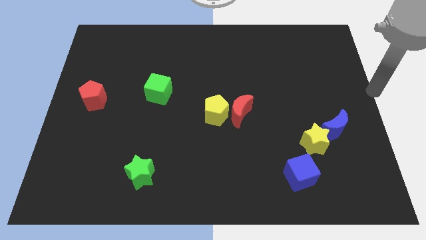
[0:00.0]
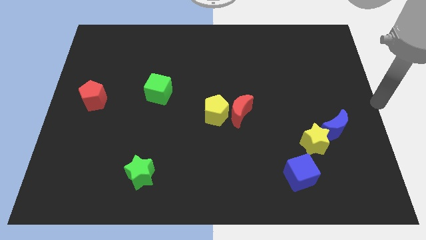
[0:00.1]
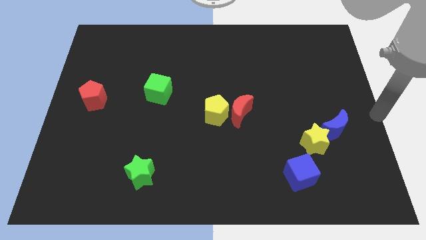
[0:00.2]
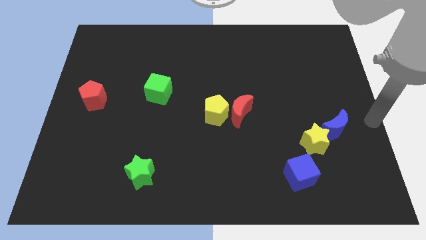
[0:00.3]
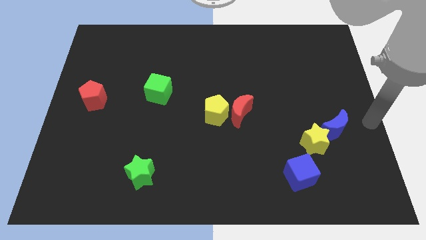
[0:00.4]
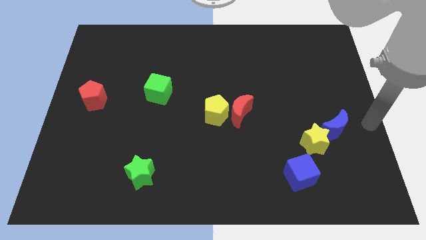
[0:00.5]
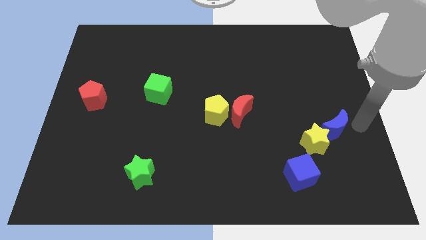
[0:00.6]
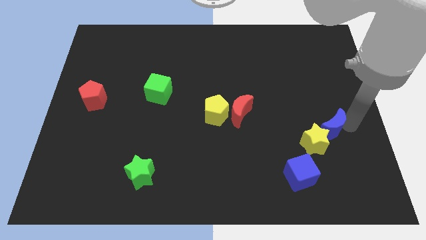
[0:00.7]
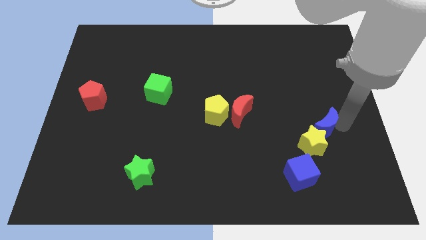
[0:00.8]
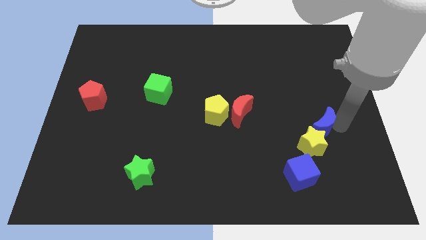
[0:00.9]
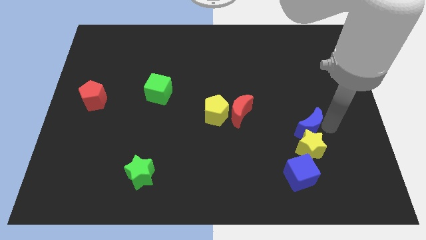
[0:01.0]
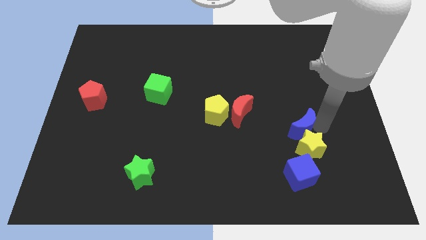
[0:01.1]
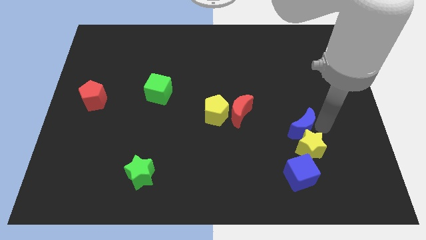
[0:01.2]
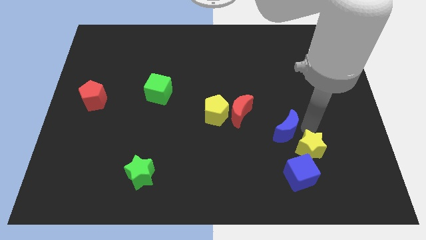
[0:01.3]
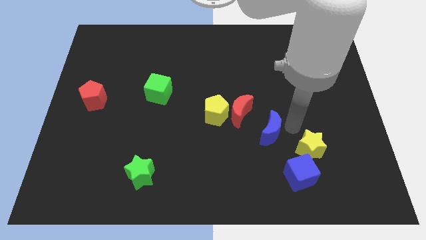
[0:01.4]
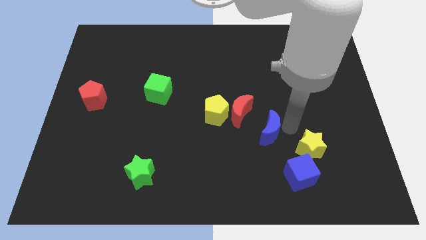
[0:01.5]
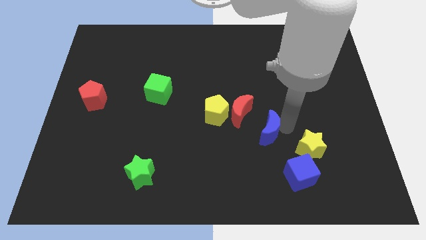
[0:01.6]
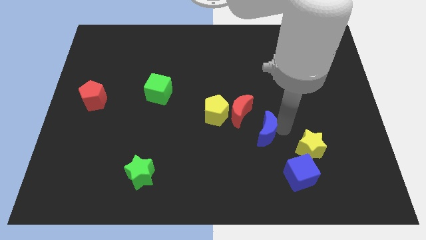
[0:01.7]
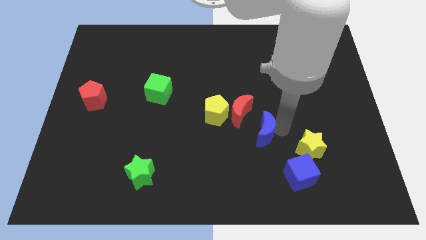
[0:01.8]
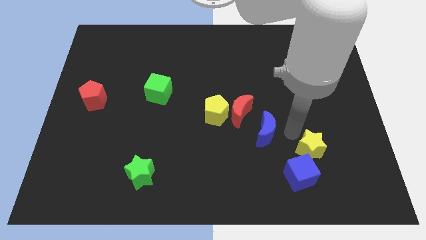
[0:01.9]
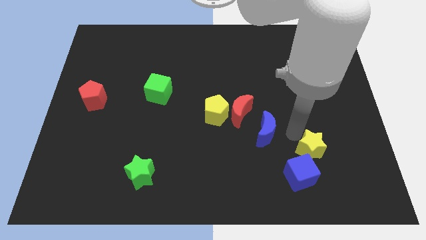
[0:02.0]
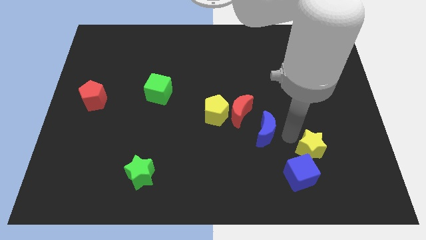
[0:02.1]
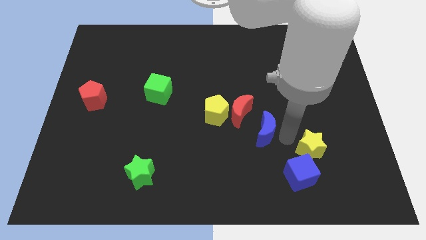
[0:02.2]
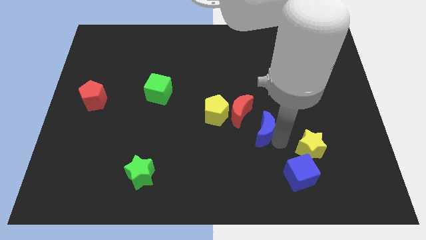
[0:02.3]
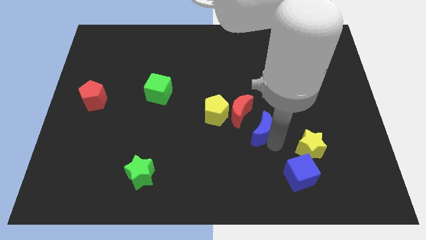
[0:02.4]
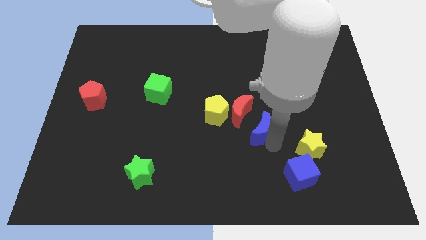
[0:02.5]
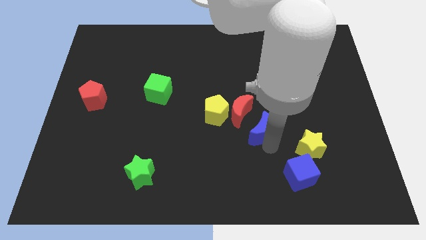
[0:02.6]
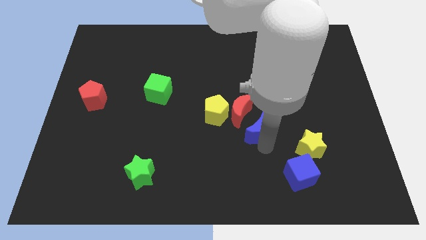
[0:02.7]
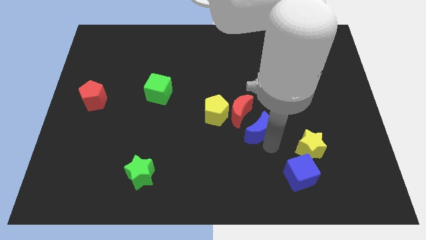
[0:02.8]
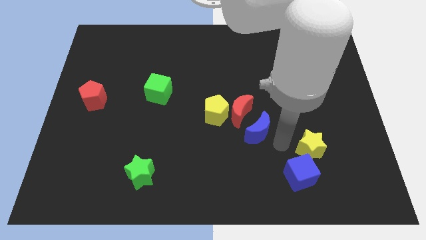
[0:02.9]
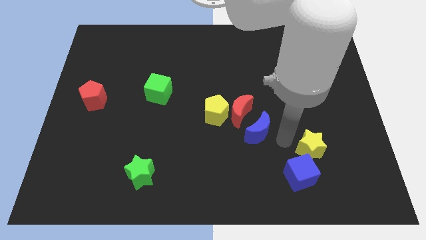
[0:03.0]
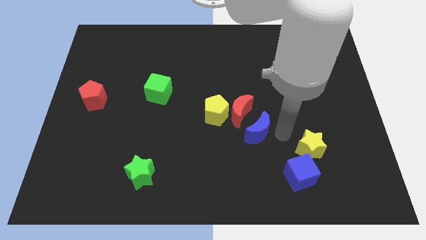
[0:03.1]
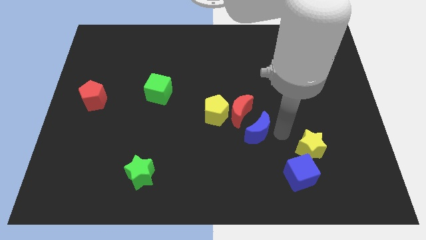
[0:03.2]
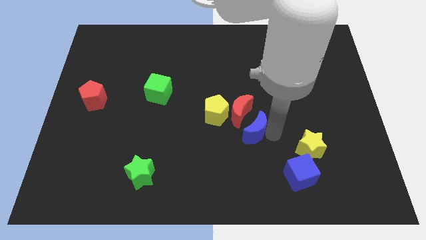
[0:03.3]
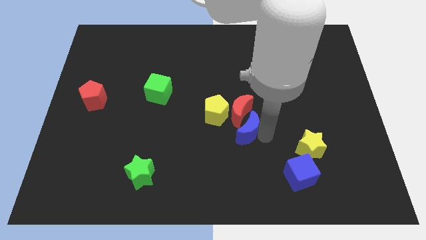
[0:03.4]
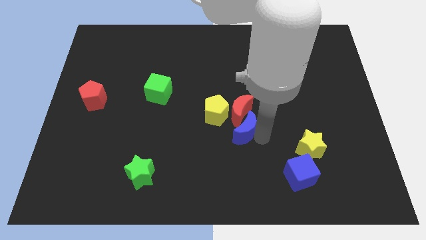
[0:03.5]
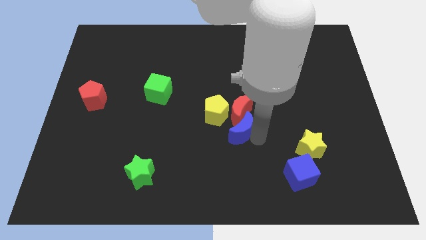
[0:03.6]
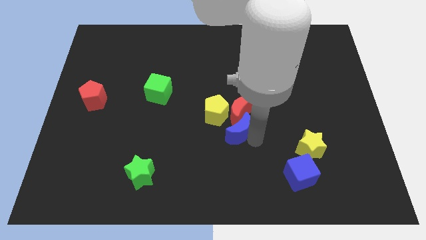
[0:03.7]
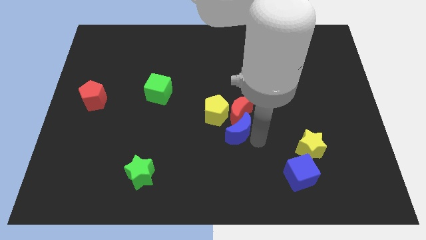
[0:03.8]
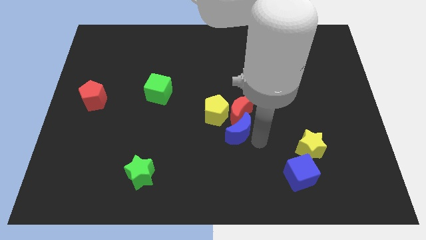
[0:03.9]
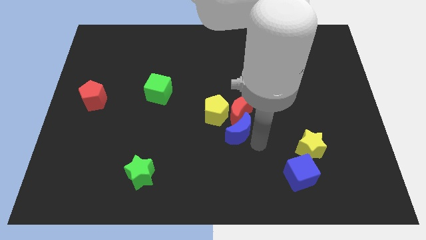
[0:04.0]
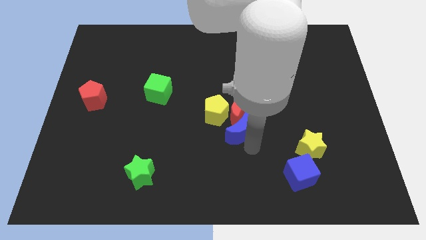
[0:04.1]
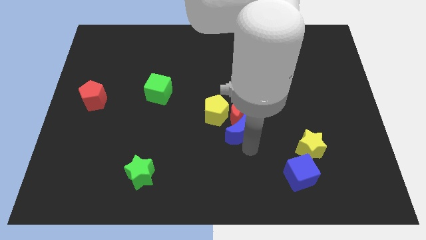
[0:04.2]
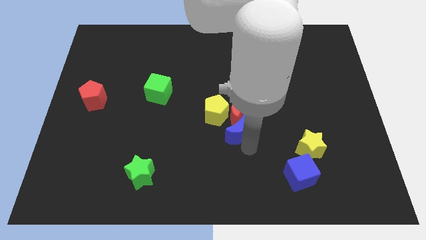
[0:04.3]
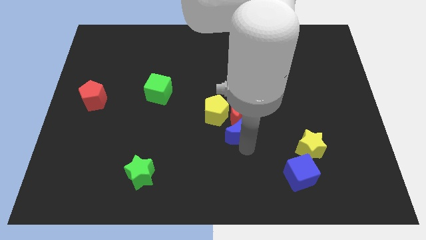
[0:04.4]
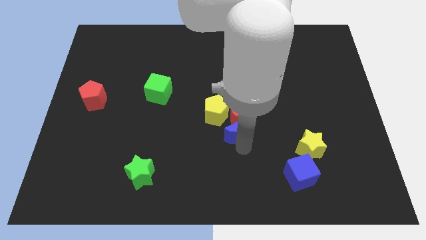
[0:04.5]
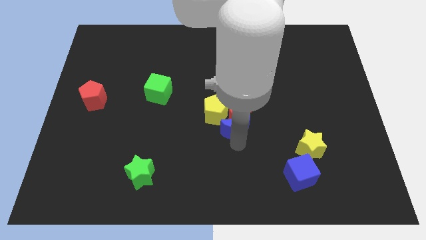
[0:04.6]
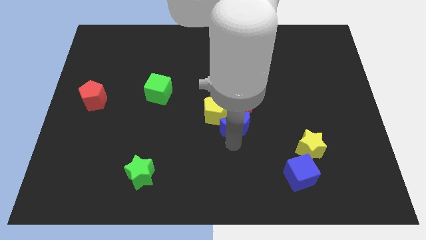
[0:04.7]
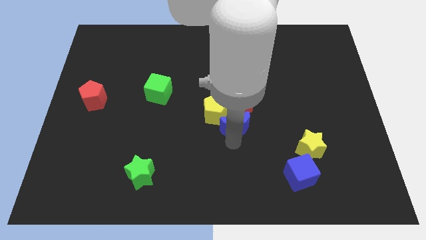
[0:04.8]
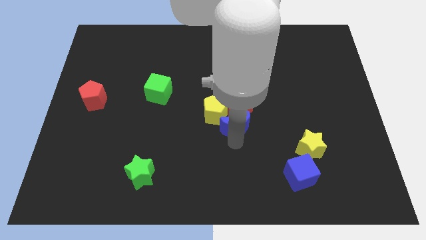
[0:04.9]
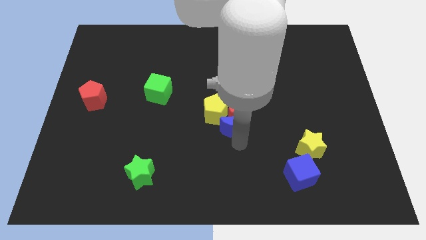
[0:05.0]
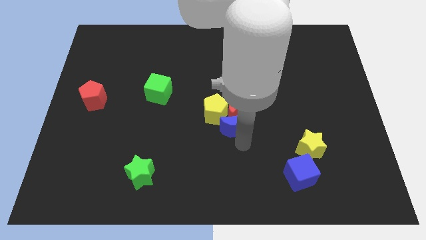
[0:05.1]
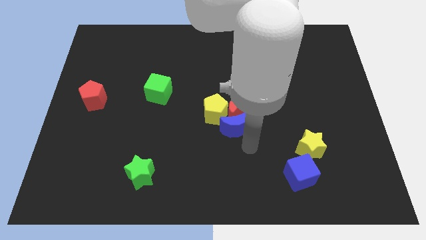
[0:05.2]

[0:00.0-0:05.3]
push the blue moon into red moon

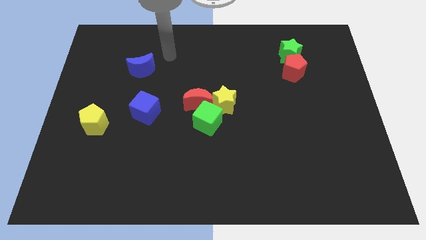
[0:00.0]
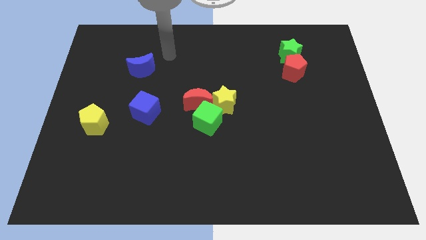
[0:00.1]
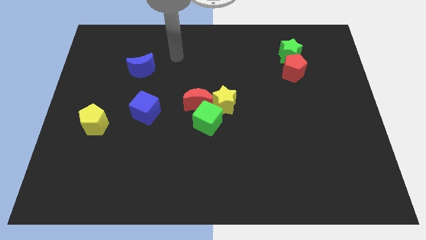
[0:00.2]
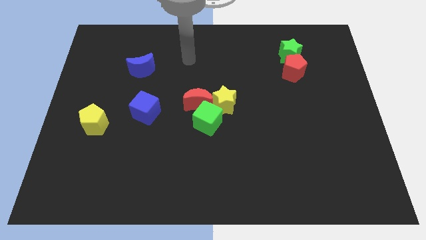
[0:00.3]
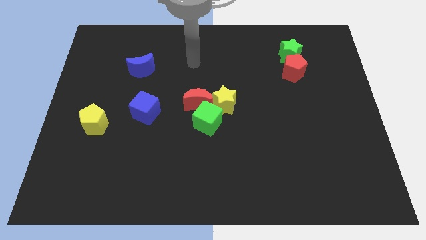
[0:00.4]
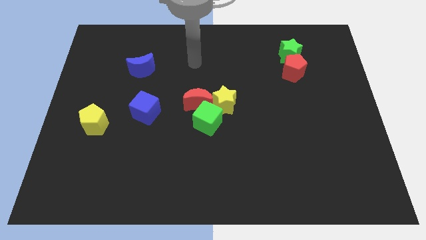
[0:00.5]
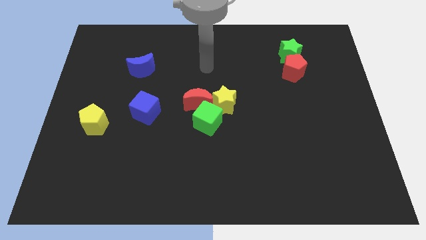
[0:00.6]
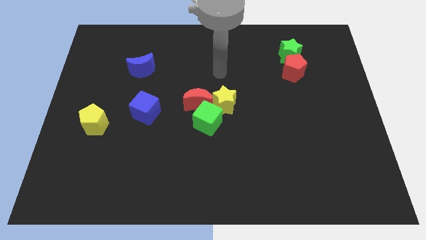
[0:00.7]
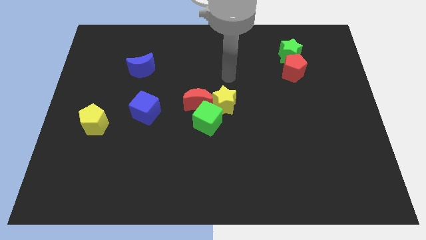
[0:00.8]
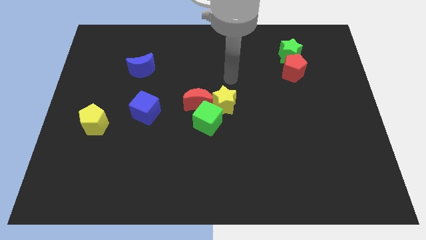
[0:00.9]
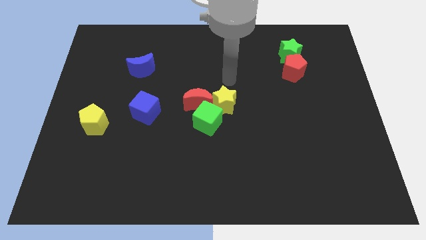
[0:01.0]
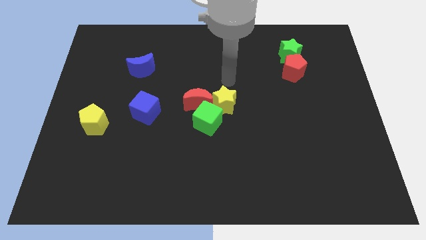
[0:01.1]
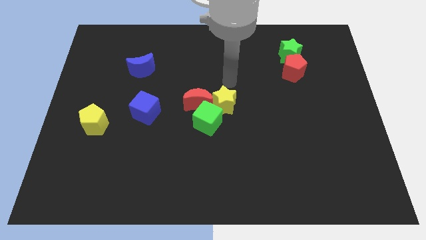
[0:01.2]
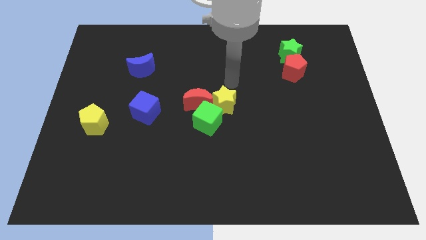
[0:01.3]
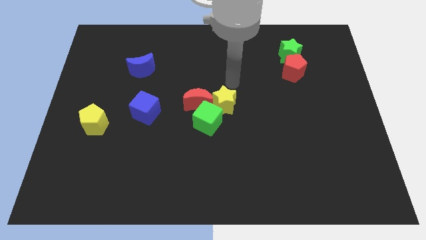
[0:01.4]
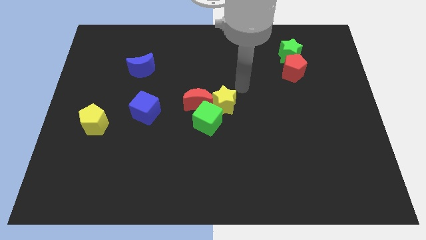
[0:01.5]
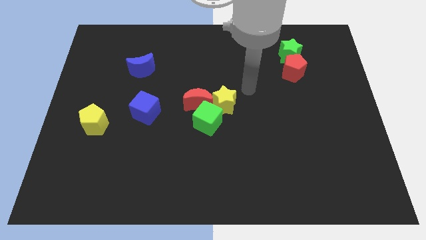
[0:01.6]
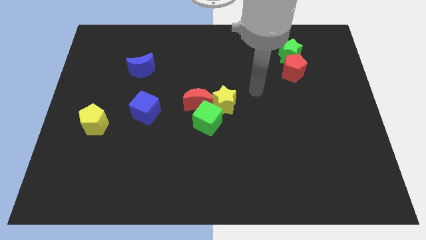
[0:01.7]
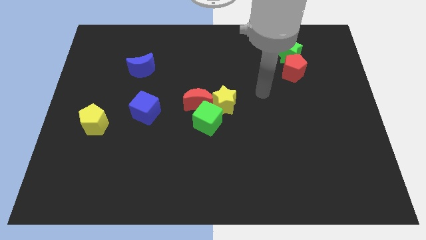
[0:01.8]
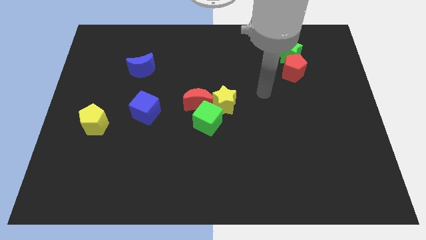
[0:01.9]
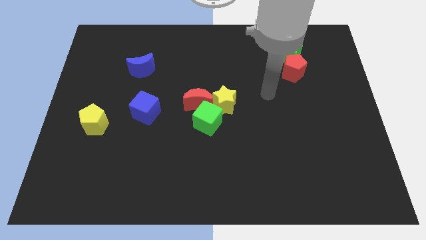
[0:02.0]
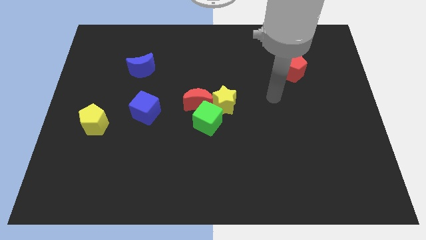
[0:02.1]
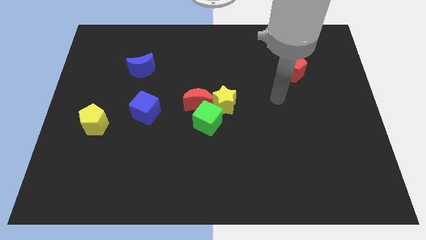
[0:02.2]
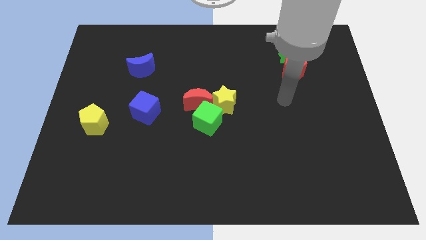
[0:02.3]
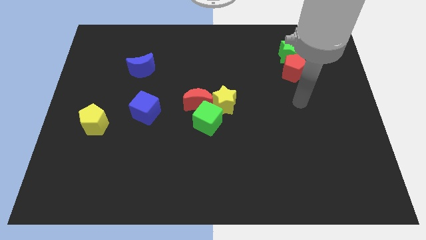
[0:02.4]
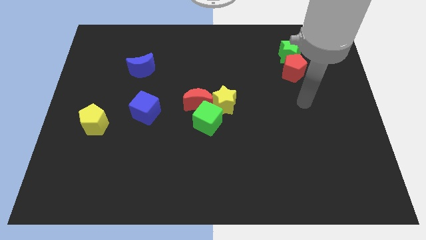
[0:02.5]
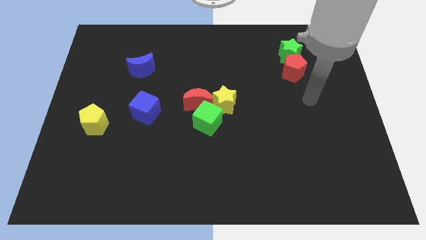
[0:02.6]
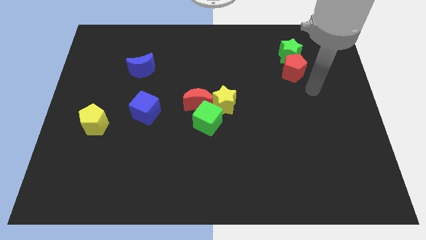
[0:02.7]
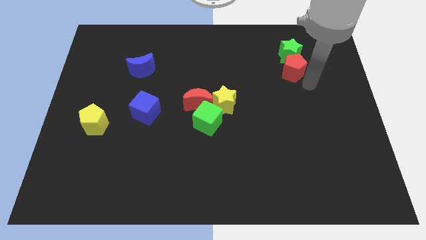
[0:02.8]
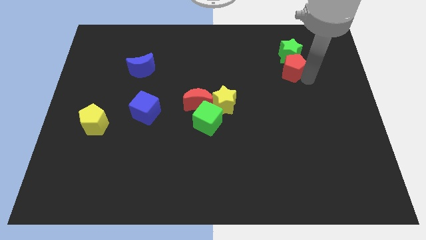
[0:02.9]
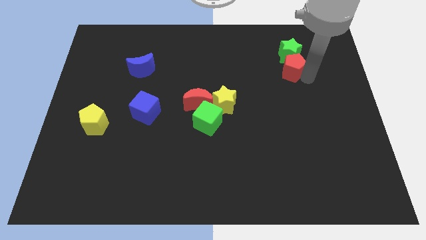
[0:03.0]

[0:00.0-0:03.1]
place the arm near the red pentagon

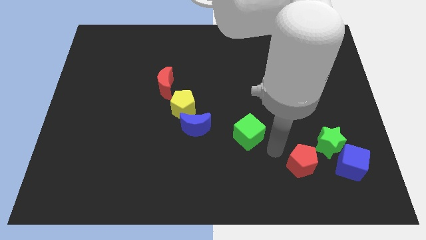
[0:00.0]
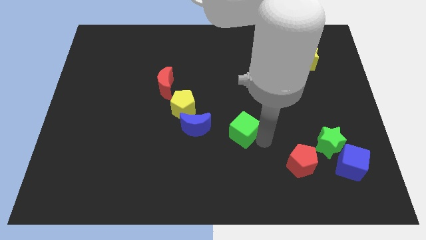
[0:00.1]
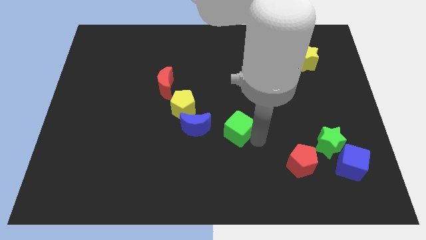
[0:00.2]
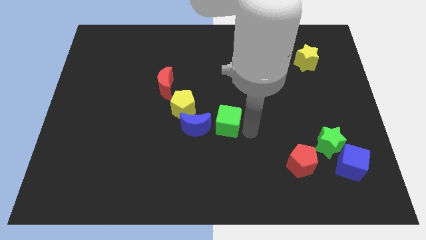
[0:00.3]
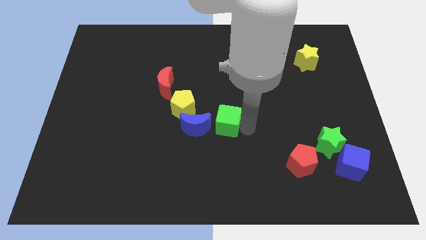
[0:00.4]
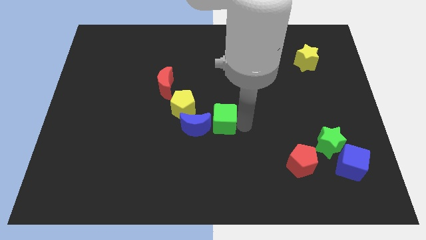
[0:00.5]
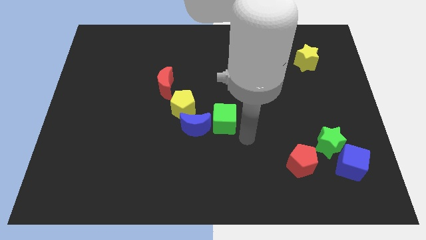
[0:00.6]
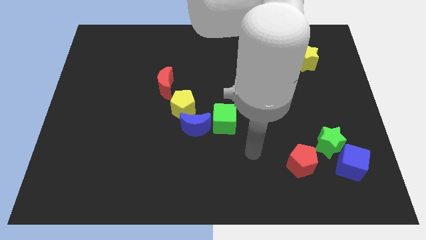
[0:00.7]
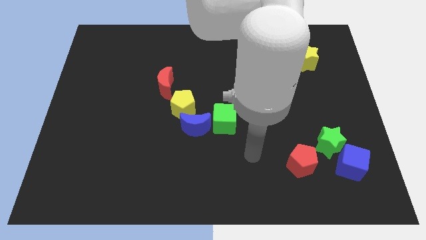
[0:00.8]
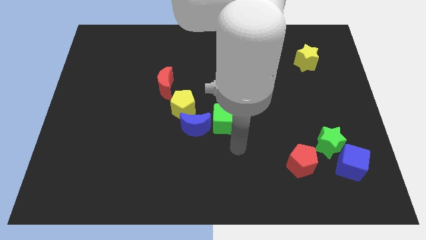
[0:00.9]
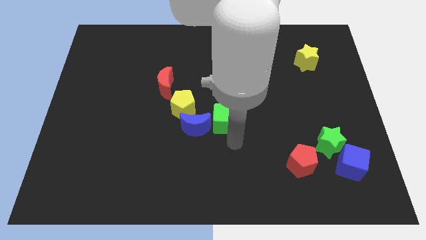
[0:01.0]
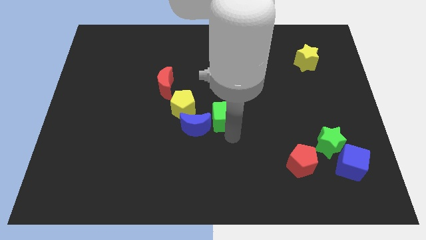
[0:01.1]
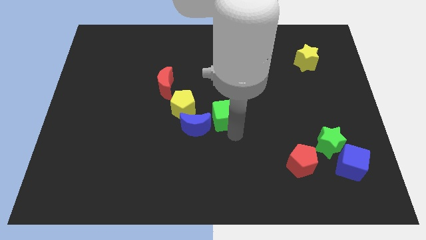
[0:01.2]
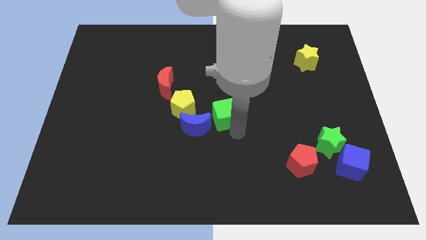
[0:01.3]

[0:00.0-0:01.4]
move the green cube to the left of the blue moon
